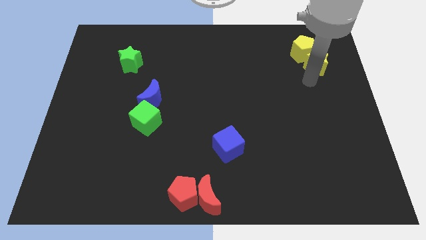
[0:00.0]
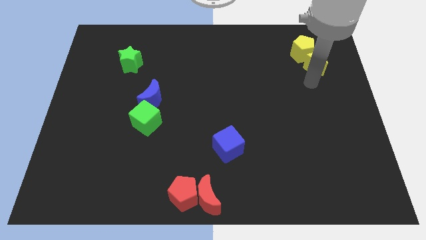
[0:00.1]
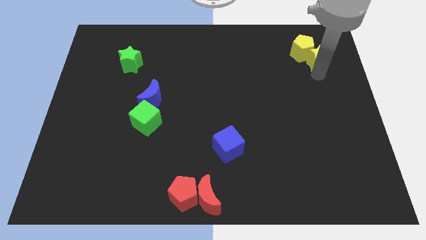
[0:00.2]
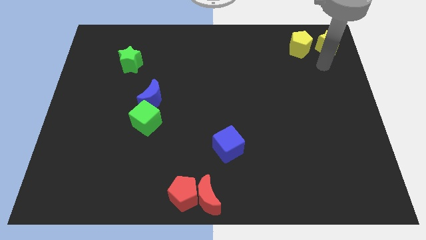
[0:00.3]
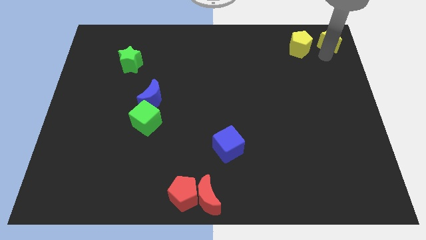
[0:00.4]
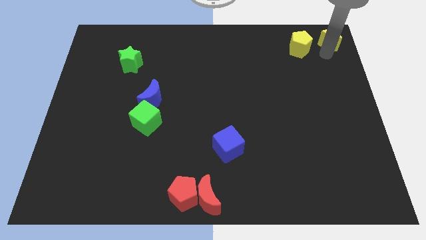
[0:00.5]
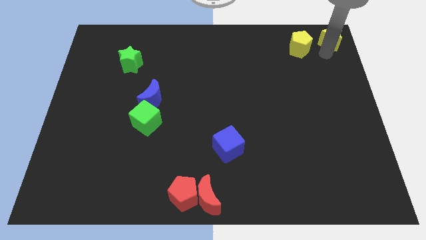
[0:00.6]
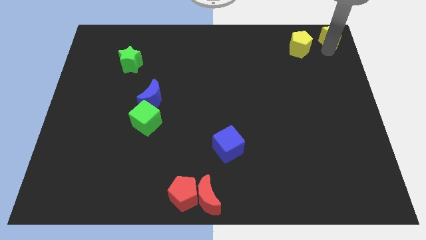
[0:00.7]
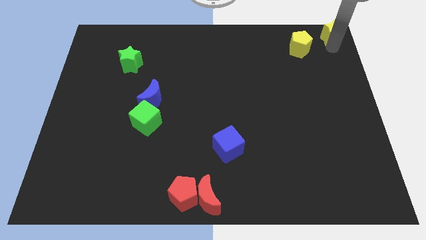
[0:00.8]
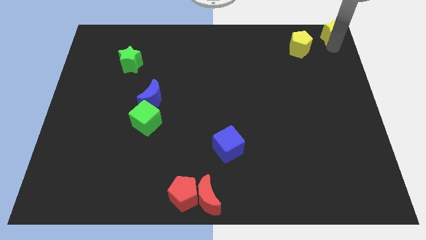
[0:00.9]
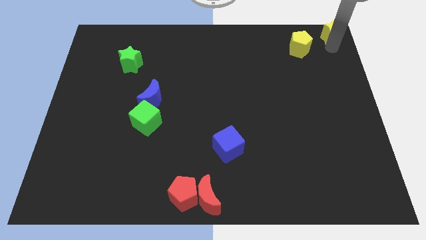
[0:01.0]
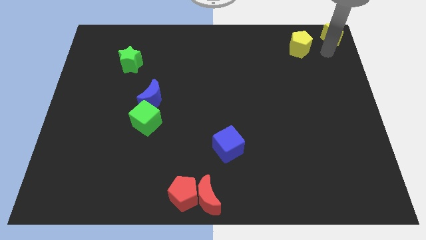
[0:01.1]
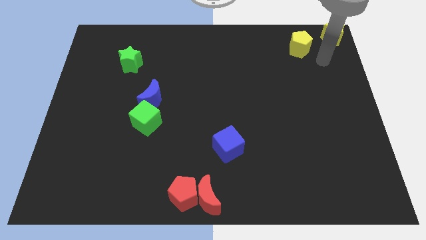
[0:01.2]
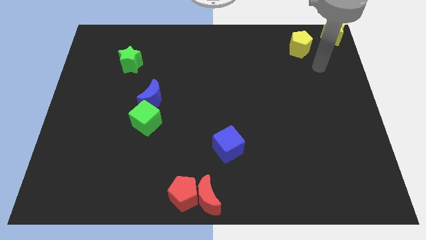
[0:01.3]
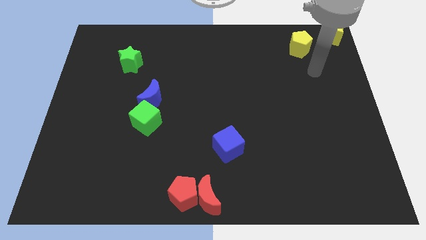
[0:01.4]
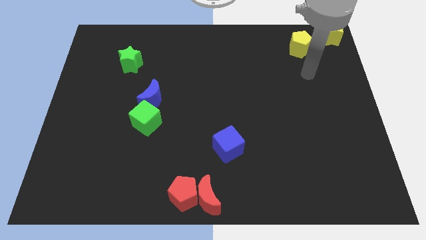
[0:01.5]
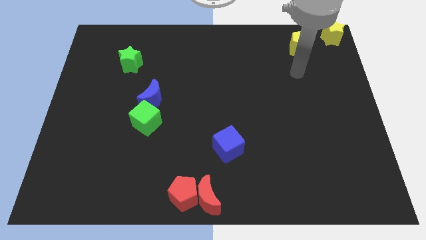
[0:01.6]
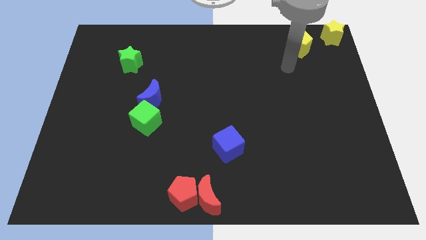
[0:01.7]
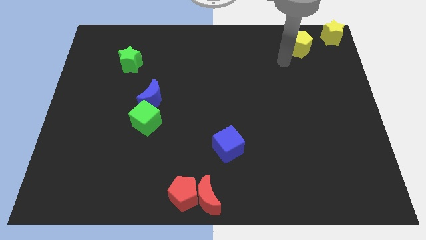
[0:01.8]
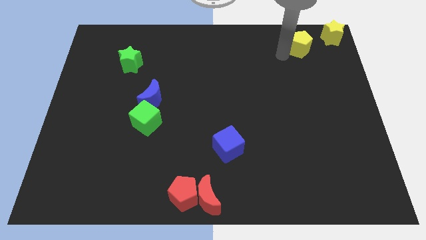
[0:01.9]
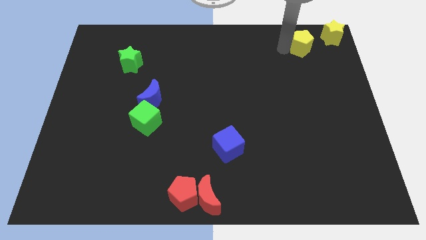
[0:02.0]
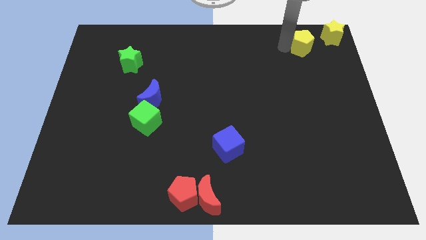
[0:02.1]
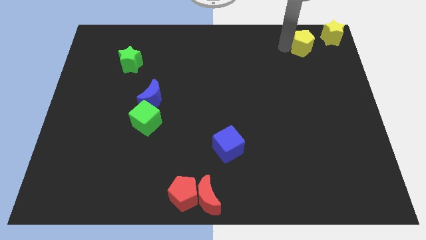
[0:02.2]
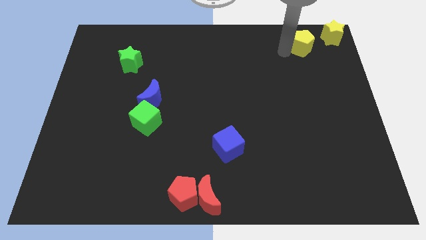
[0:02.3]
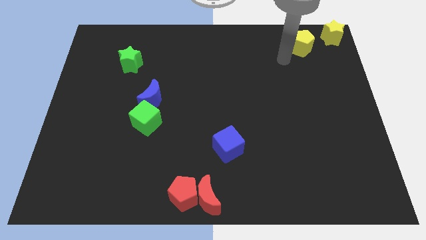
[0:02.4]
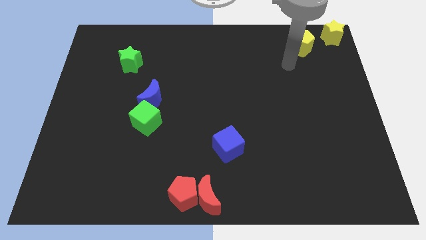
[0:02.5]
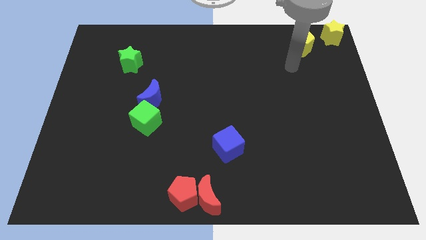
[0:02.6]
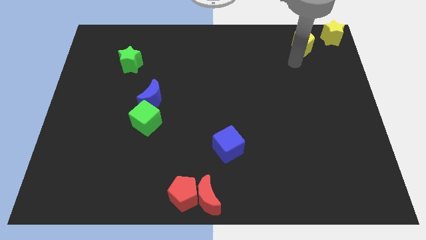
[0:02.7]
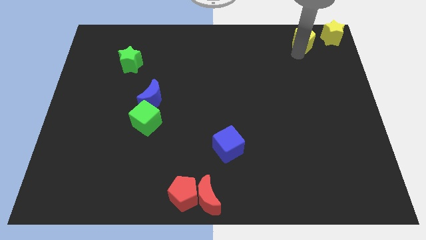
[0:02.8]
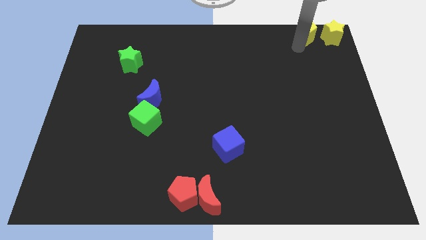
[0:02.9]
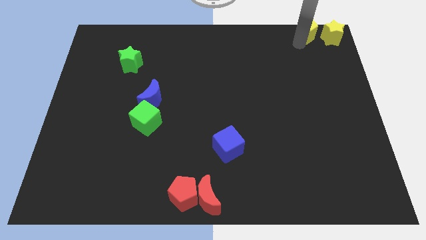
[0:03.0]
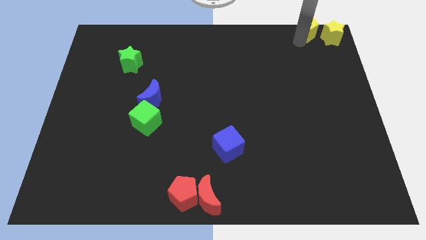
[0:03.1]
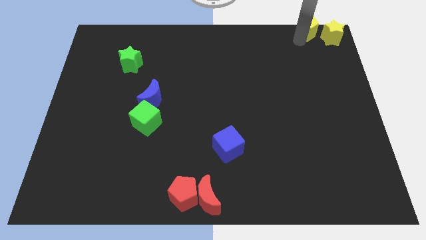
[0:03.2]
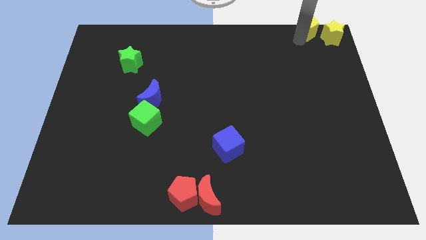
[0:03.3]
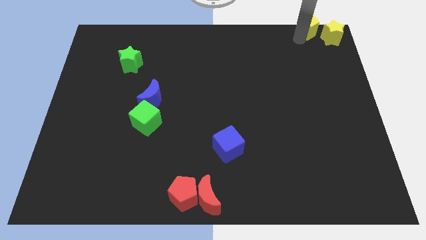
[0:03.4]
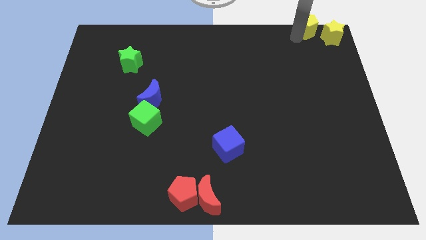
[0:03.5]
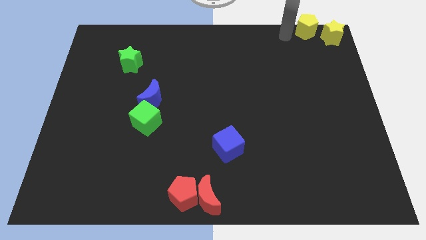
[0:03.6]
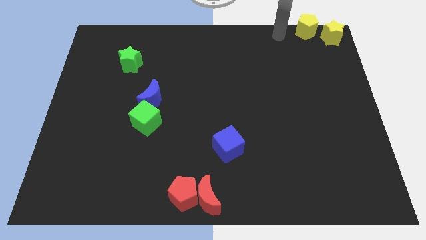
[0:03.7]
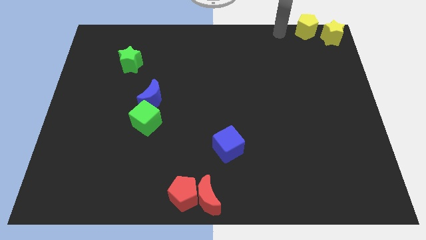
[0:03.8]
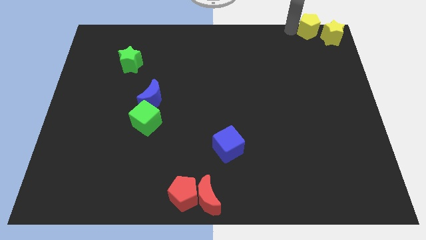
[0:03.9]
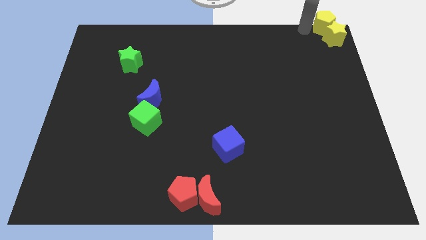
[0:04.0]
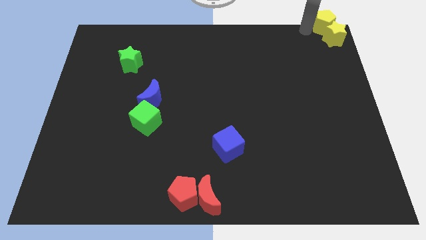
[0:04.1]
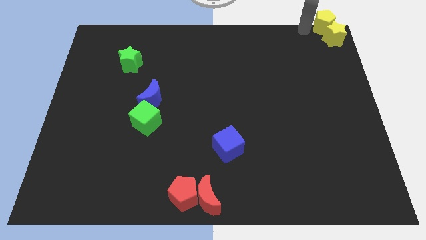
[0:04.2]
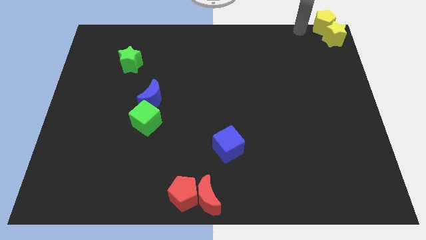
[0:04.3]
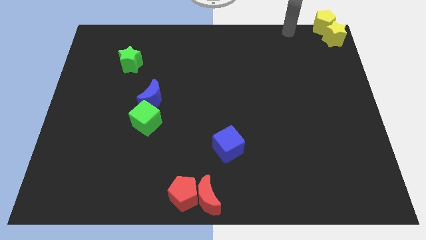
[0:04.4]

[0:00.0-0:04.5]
place the yellow things at the top right side of the board

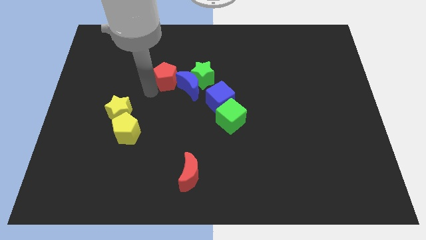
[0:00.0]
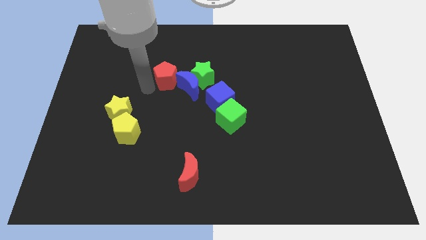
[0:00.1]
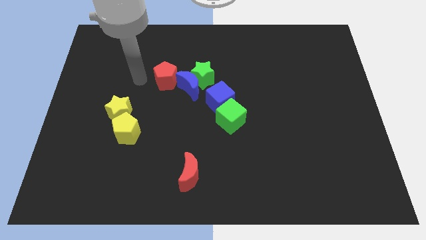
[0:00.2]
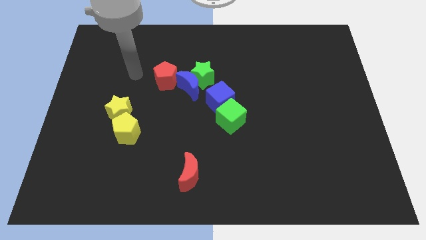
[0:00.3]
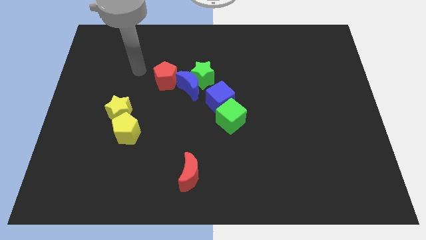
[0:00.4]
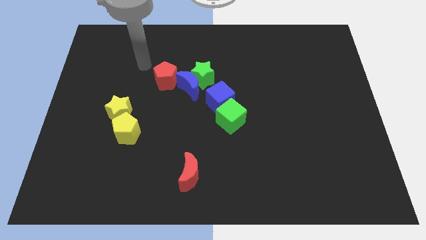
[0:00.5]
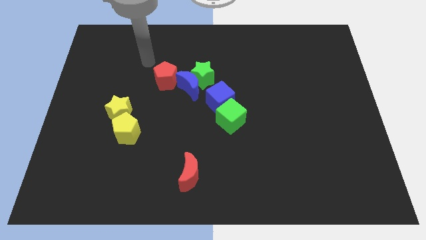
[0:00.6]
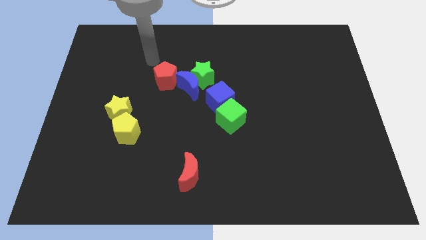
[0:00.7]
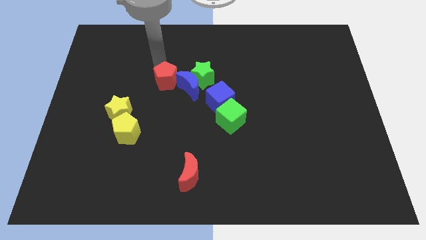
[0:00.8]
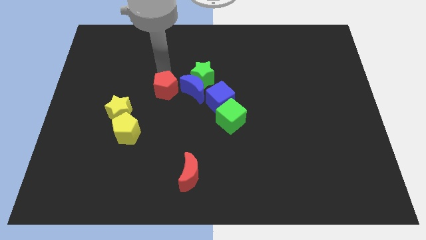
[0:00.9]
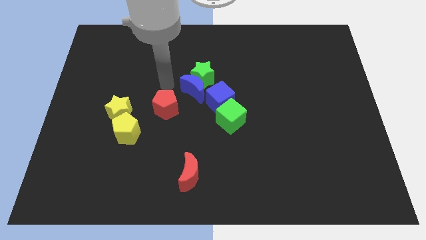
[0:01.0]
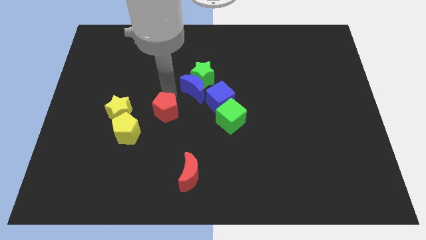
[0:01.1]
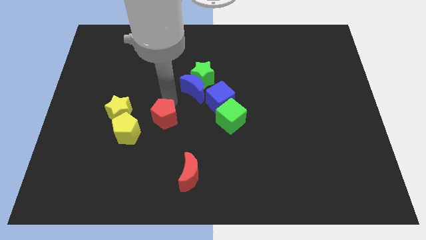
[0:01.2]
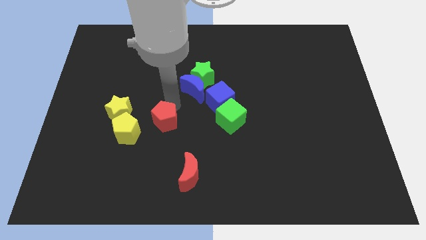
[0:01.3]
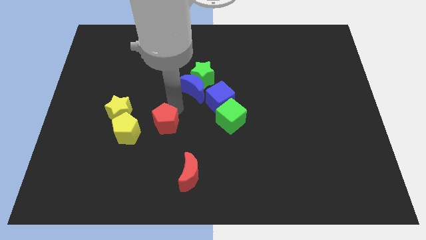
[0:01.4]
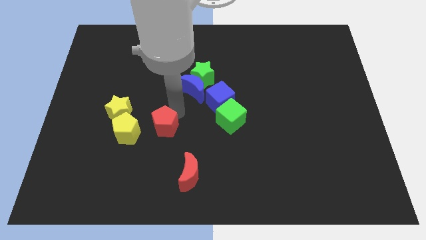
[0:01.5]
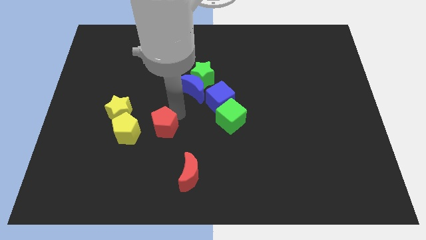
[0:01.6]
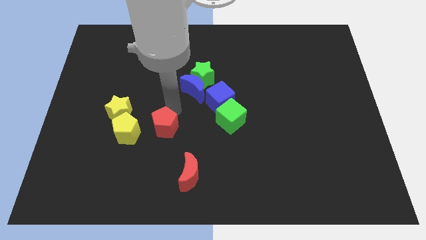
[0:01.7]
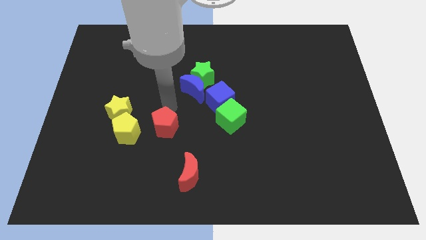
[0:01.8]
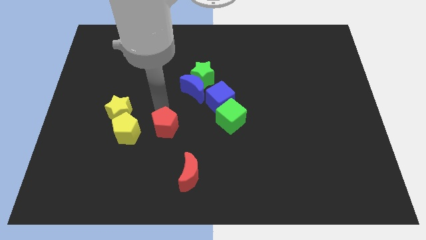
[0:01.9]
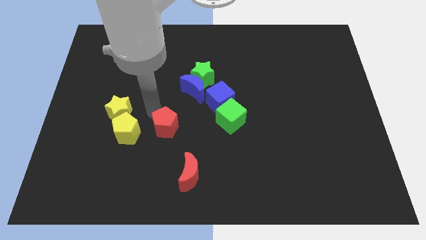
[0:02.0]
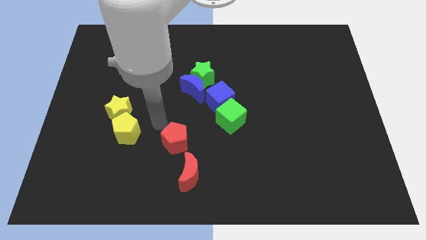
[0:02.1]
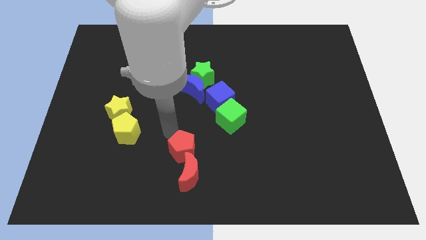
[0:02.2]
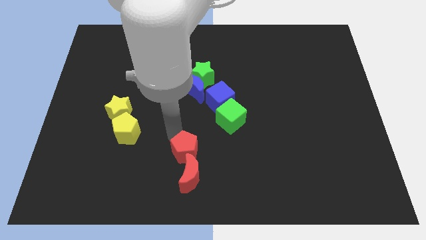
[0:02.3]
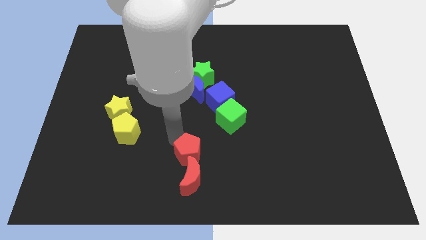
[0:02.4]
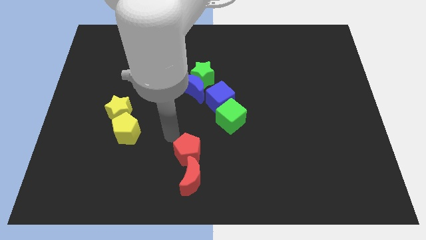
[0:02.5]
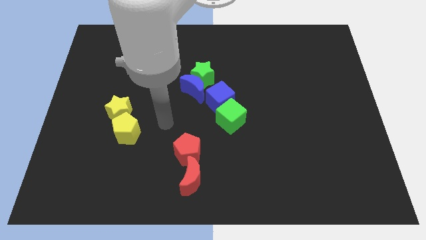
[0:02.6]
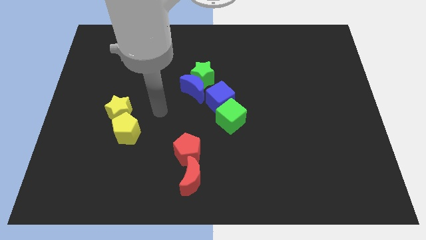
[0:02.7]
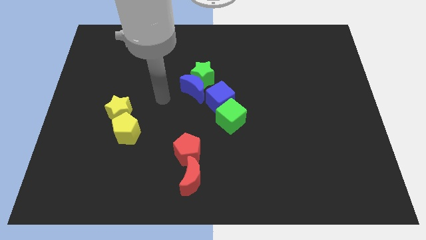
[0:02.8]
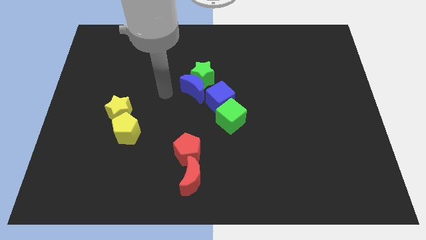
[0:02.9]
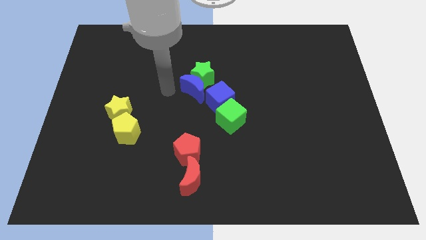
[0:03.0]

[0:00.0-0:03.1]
place the red pentagon into the red moon

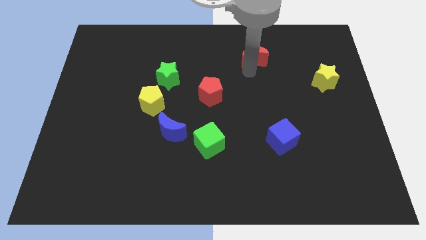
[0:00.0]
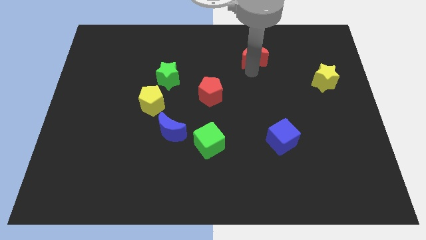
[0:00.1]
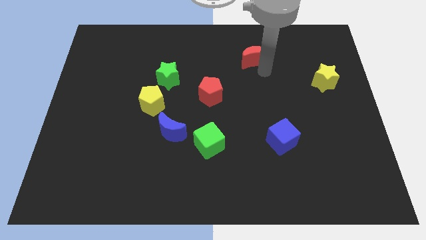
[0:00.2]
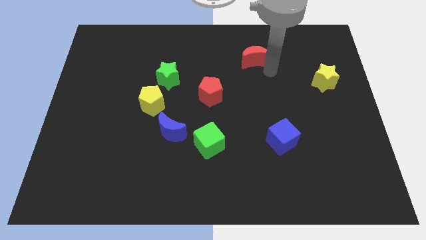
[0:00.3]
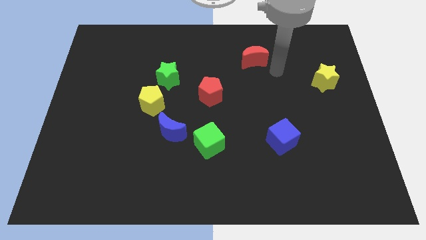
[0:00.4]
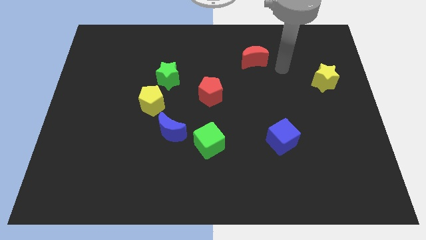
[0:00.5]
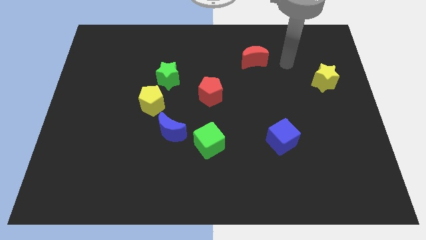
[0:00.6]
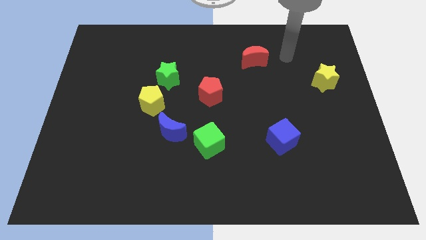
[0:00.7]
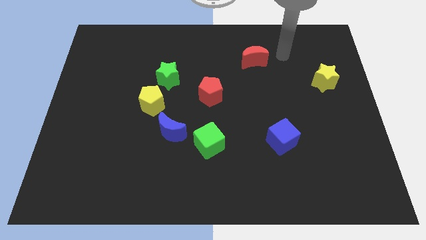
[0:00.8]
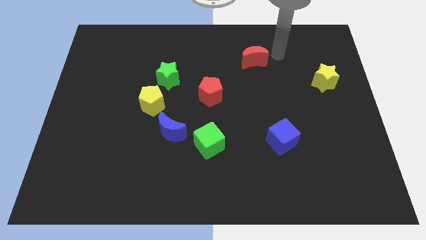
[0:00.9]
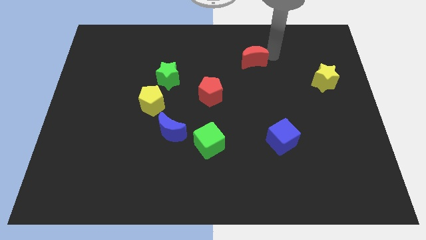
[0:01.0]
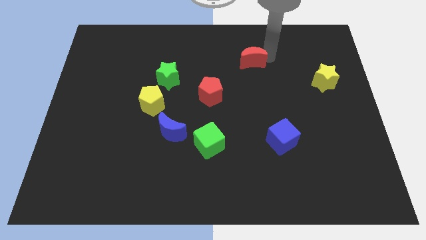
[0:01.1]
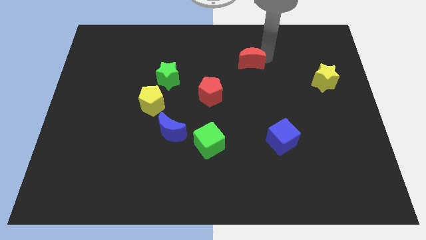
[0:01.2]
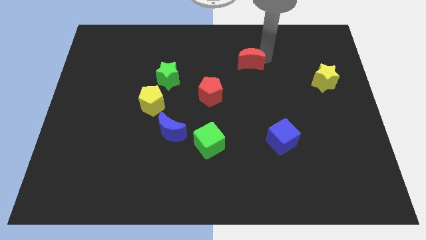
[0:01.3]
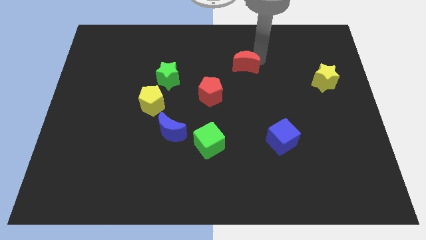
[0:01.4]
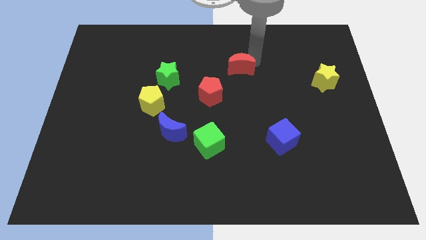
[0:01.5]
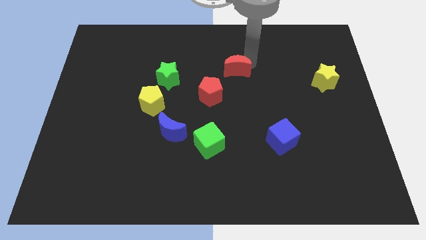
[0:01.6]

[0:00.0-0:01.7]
push the red crescent towards the red pentagon
